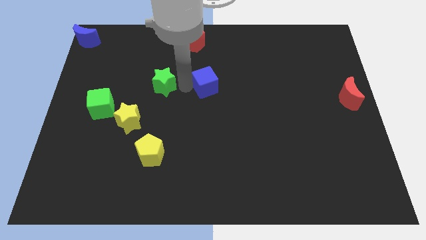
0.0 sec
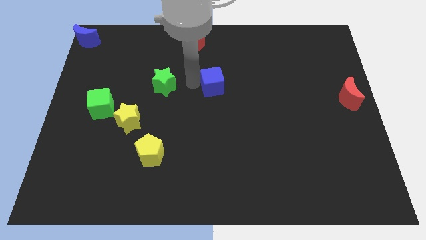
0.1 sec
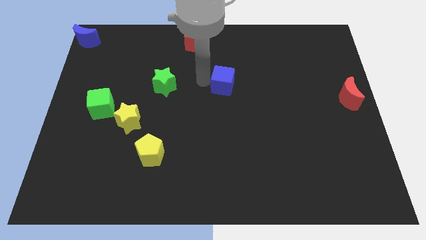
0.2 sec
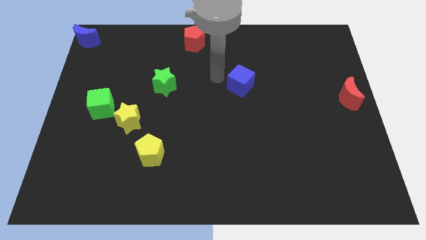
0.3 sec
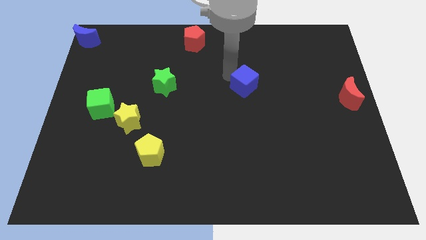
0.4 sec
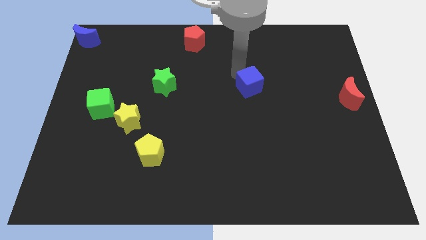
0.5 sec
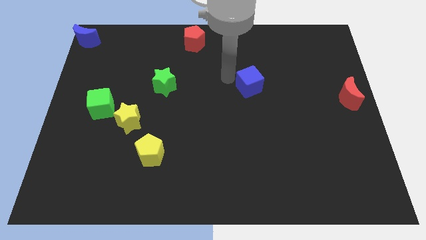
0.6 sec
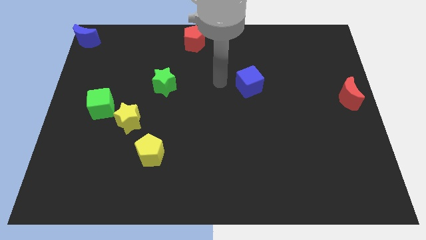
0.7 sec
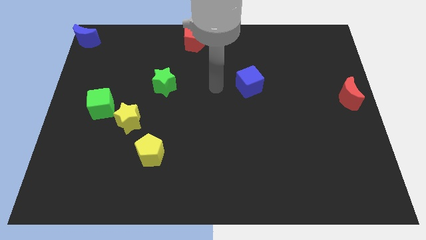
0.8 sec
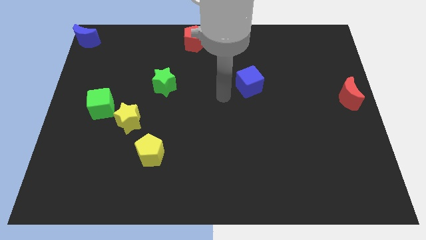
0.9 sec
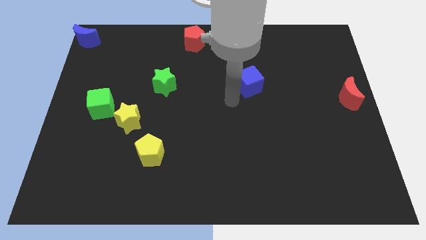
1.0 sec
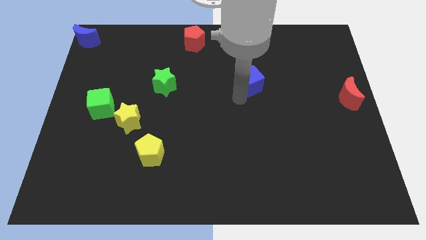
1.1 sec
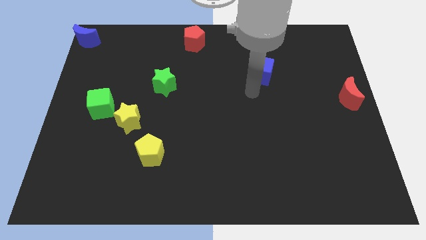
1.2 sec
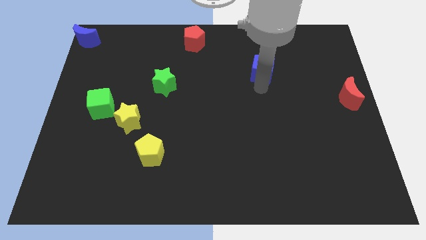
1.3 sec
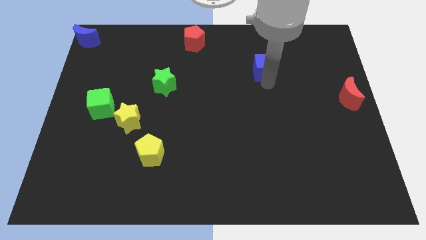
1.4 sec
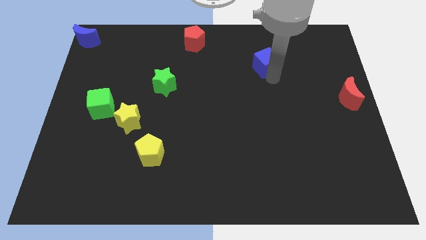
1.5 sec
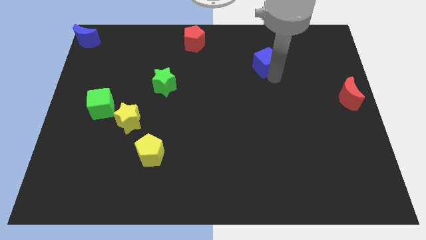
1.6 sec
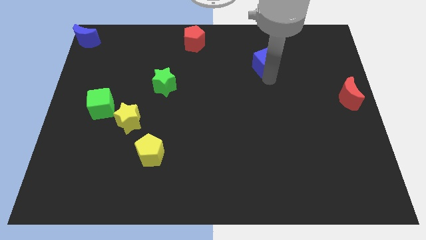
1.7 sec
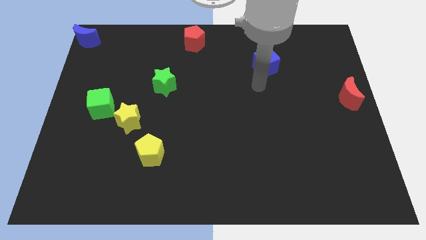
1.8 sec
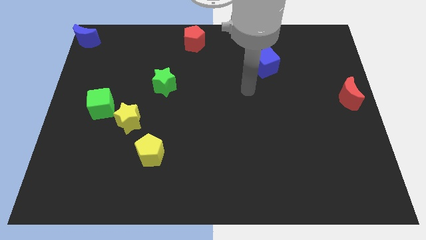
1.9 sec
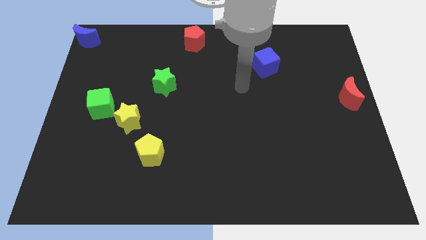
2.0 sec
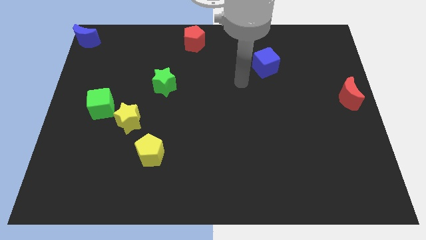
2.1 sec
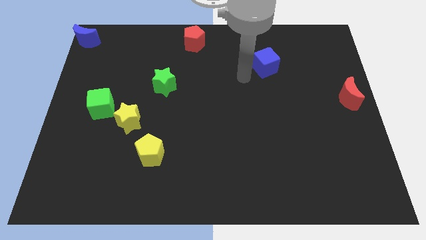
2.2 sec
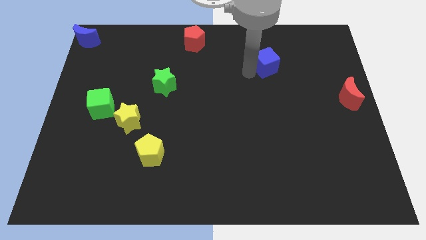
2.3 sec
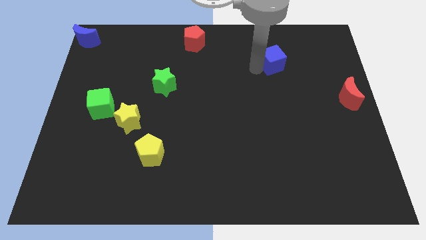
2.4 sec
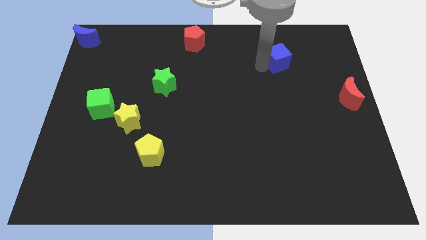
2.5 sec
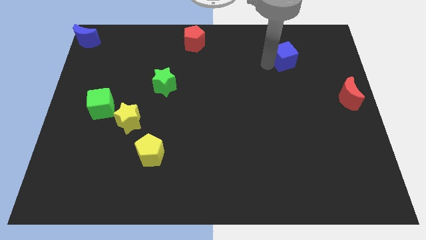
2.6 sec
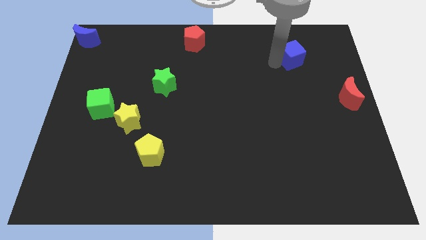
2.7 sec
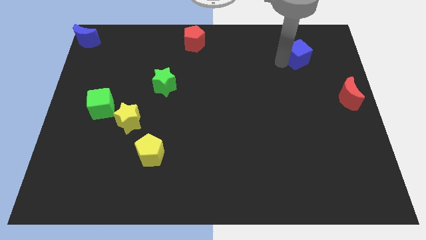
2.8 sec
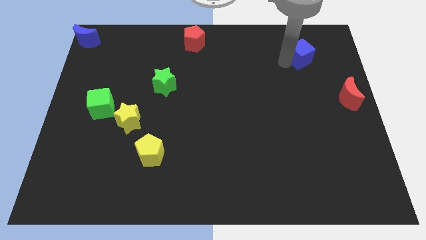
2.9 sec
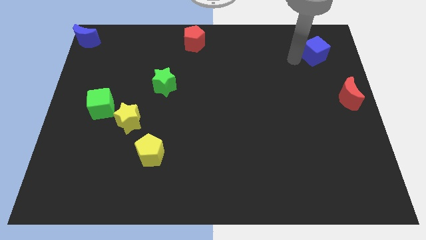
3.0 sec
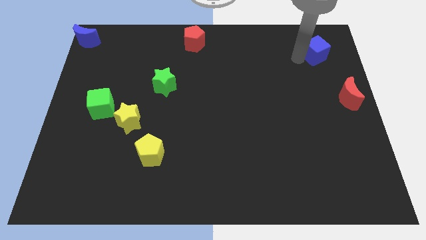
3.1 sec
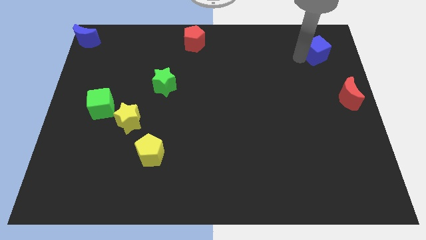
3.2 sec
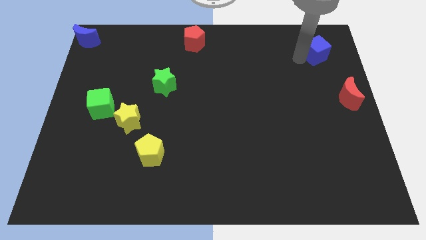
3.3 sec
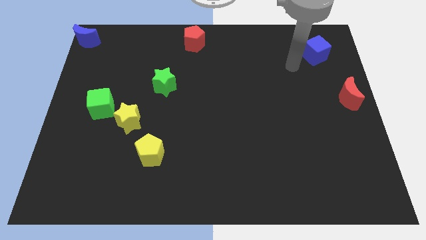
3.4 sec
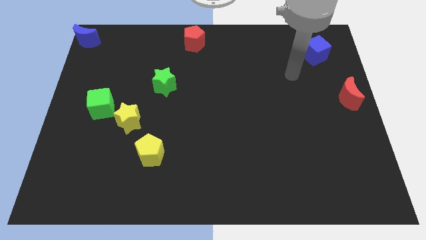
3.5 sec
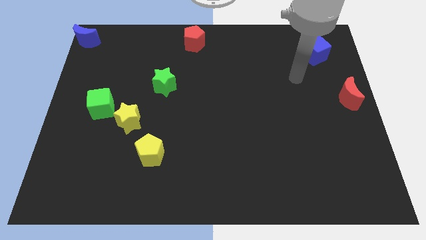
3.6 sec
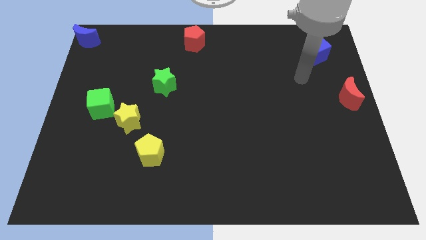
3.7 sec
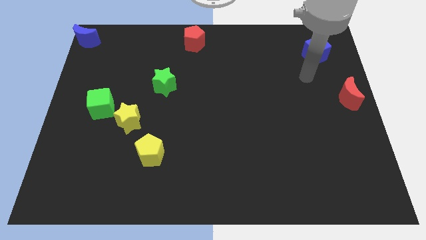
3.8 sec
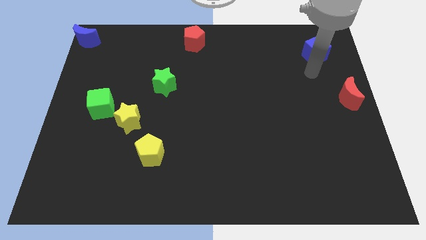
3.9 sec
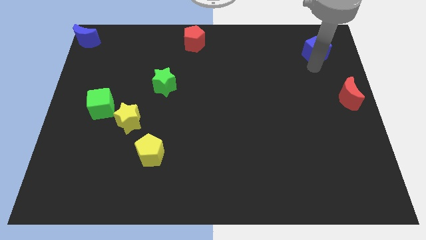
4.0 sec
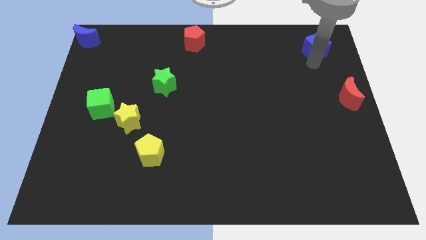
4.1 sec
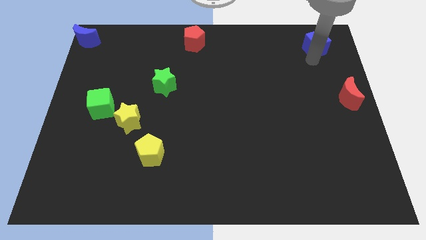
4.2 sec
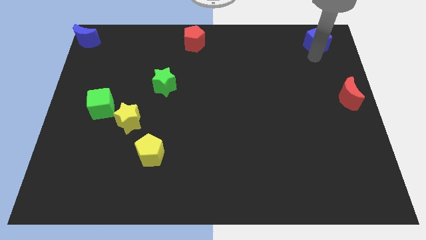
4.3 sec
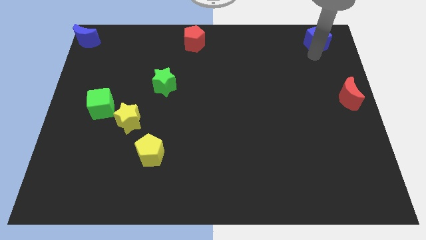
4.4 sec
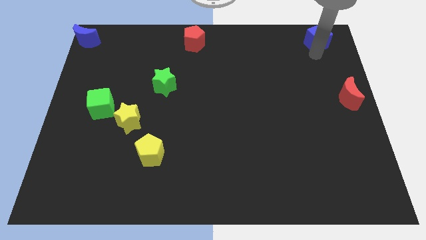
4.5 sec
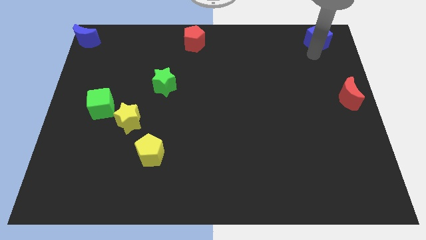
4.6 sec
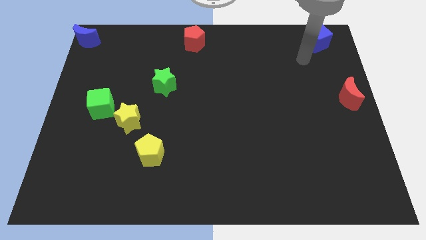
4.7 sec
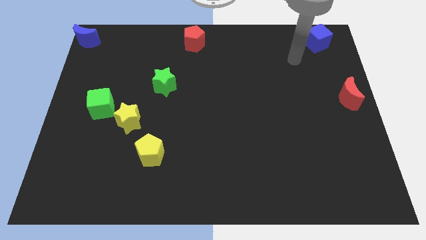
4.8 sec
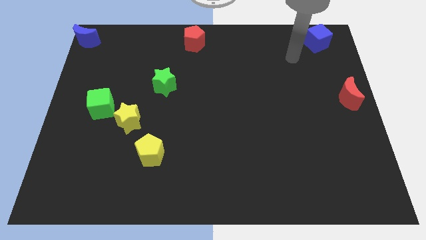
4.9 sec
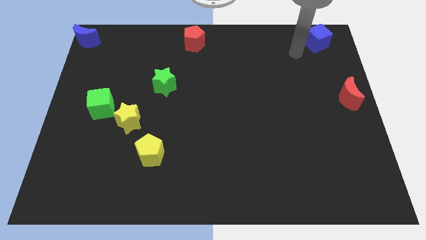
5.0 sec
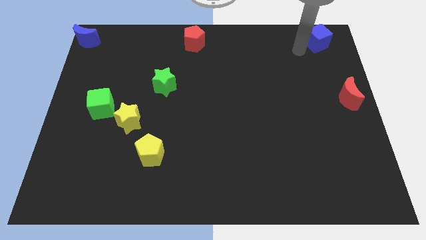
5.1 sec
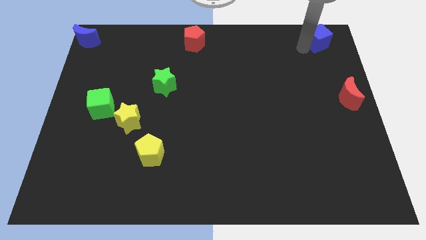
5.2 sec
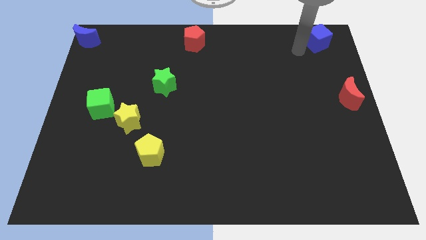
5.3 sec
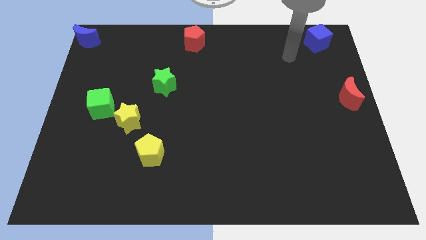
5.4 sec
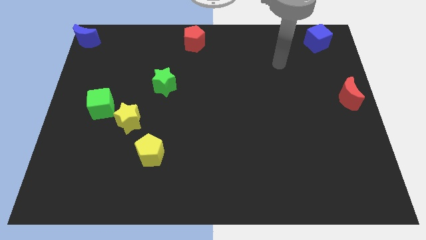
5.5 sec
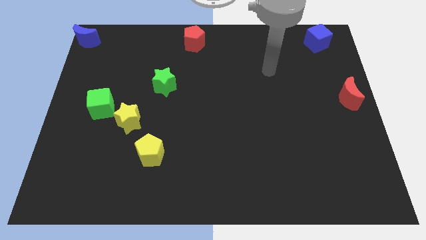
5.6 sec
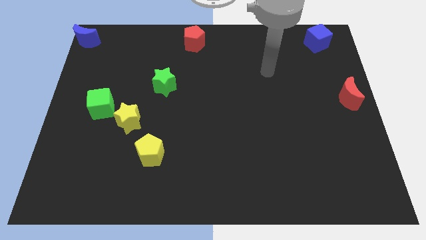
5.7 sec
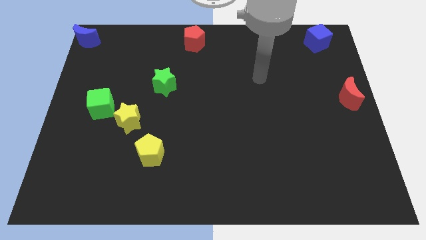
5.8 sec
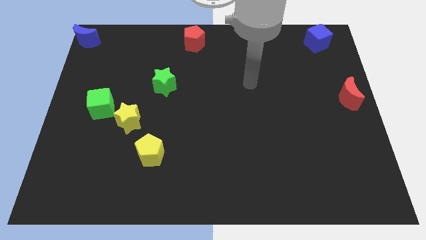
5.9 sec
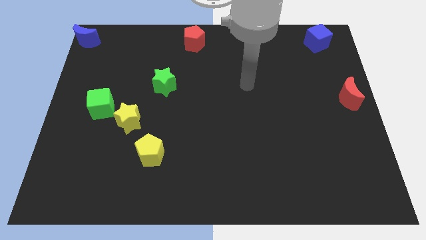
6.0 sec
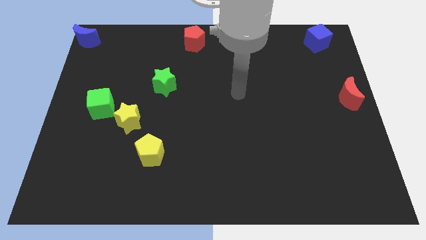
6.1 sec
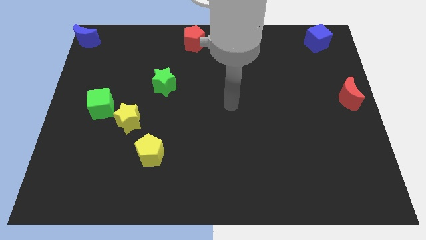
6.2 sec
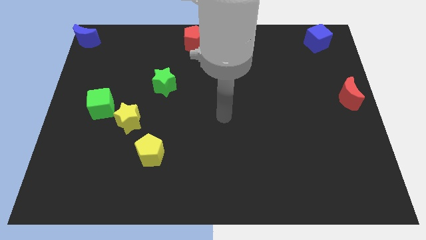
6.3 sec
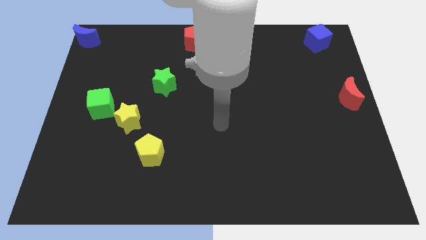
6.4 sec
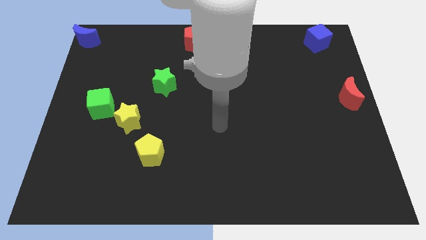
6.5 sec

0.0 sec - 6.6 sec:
push the blue cube on top right side of the board

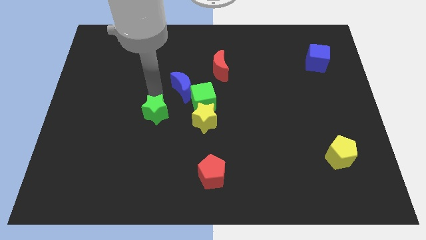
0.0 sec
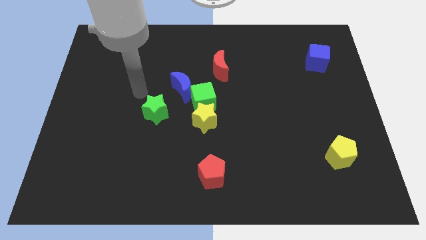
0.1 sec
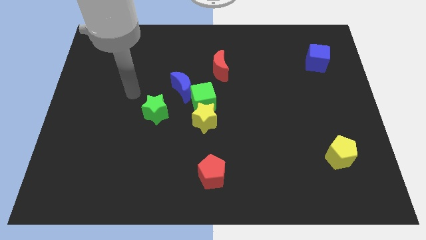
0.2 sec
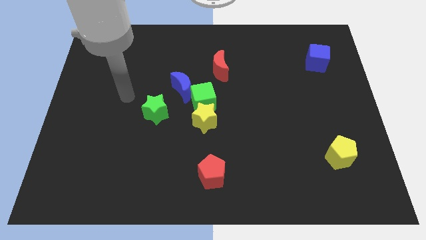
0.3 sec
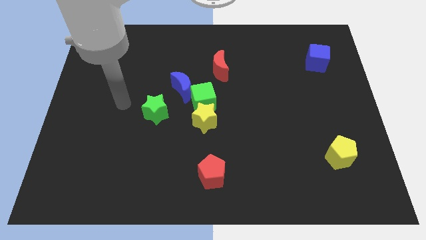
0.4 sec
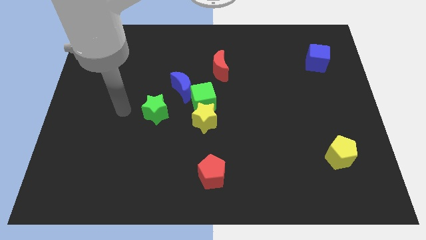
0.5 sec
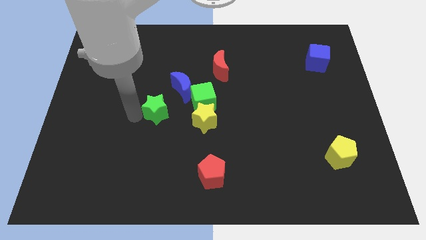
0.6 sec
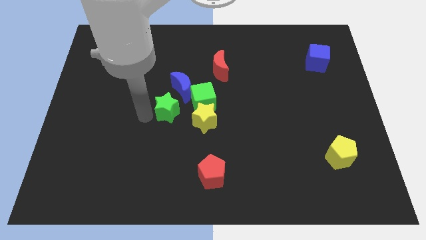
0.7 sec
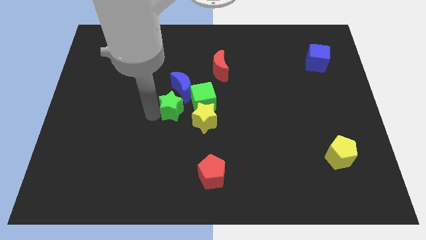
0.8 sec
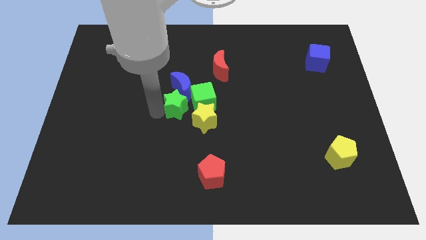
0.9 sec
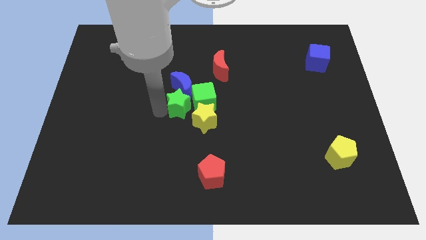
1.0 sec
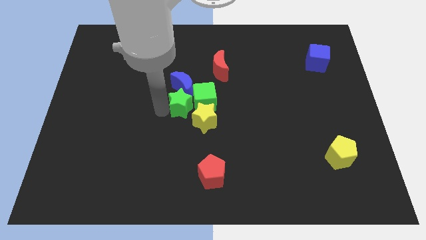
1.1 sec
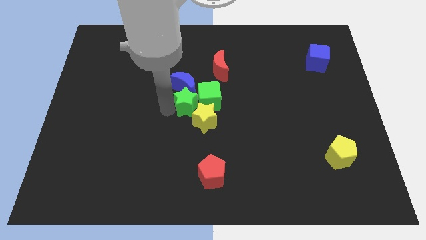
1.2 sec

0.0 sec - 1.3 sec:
push the green star into the green cube

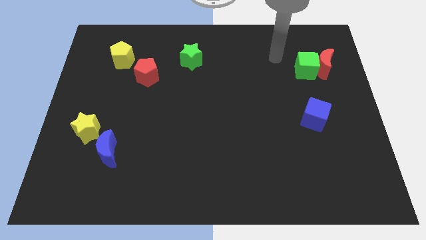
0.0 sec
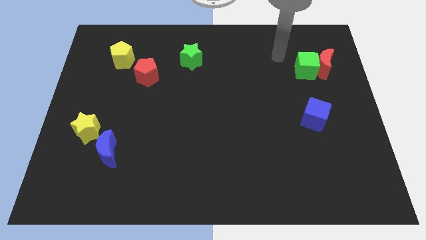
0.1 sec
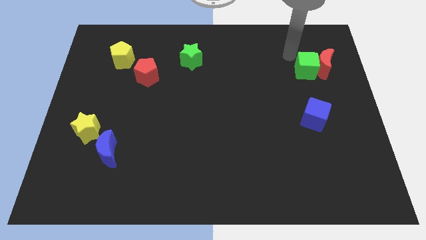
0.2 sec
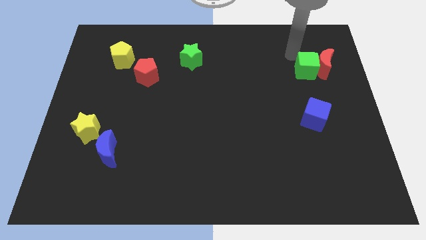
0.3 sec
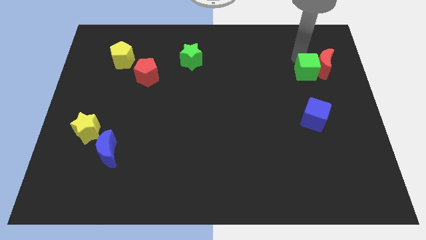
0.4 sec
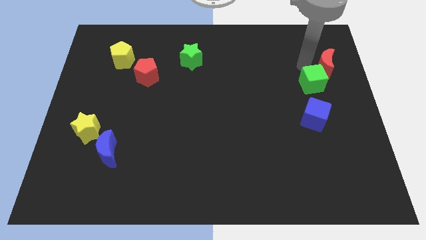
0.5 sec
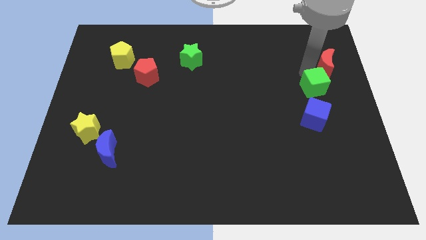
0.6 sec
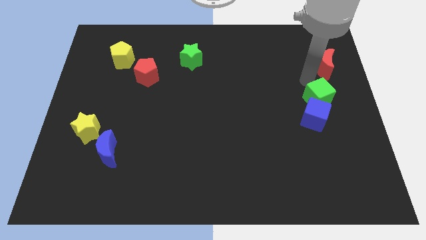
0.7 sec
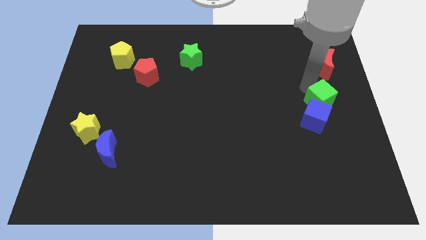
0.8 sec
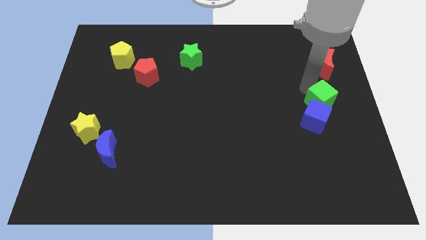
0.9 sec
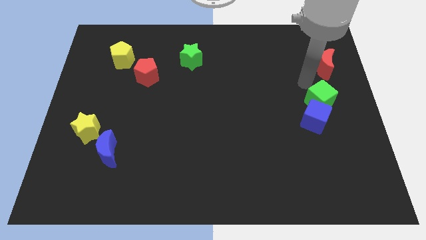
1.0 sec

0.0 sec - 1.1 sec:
place the green cube into the blue cube
